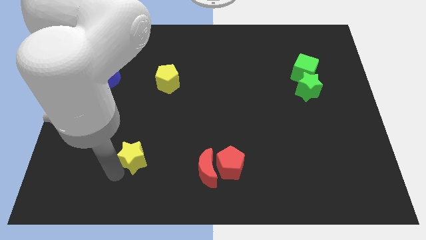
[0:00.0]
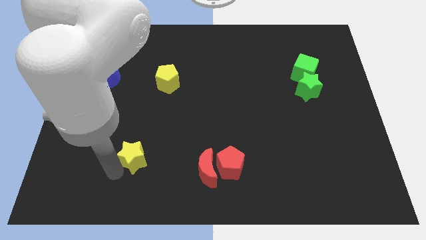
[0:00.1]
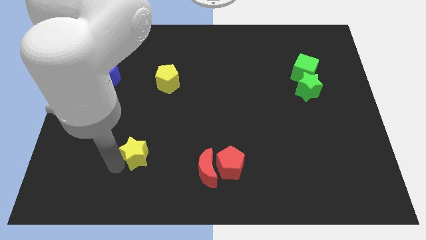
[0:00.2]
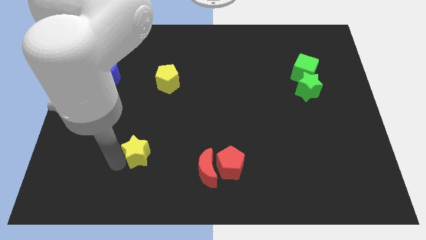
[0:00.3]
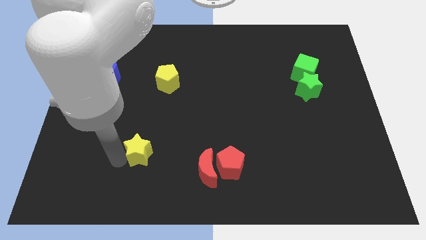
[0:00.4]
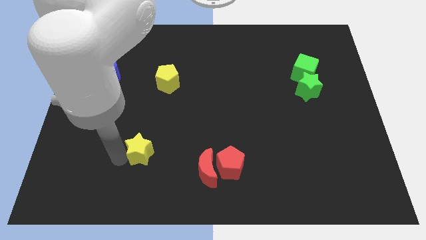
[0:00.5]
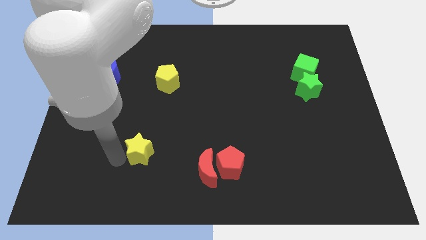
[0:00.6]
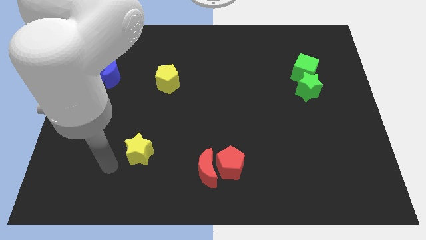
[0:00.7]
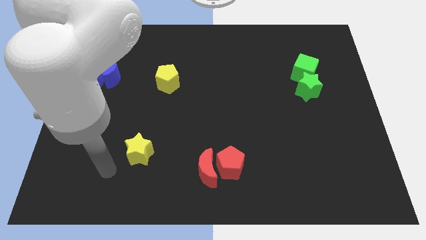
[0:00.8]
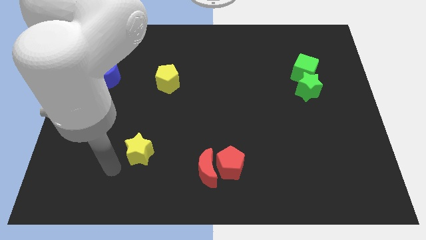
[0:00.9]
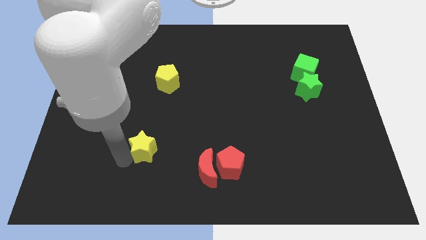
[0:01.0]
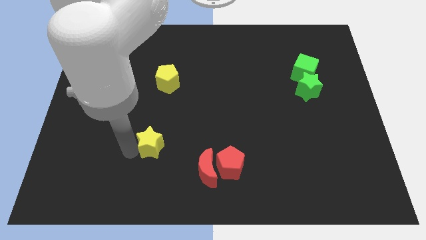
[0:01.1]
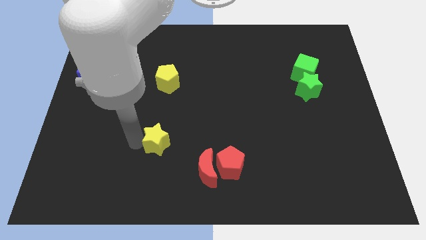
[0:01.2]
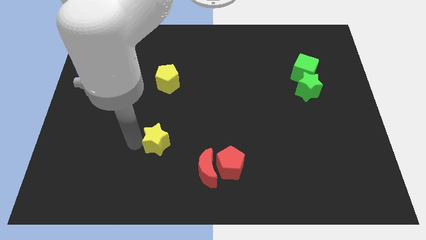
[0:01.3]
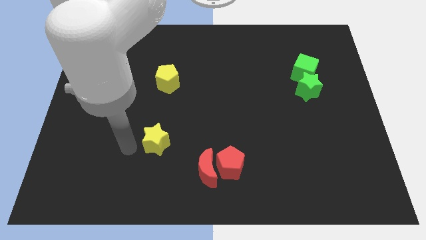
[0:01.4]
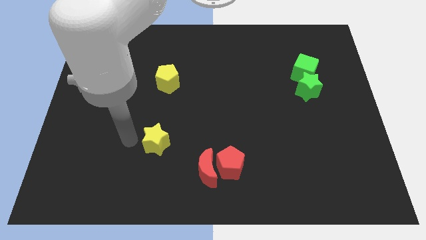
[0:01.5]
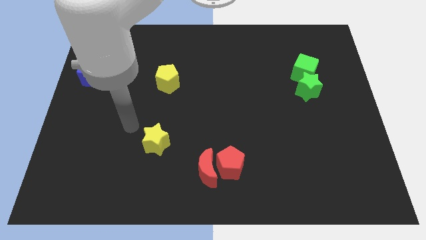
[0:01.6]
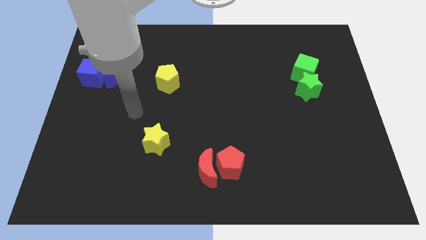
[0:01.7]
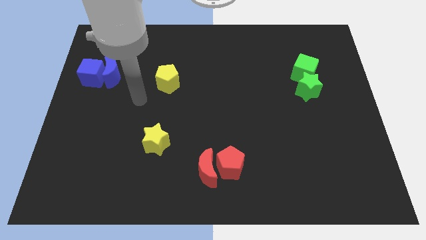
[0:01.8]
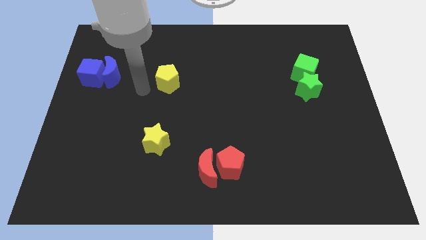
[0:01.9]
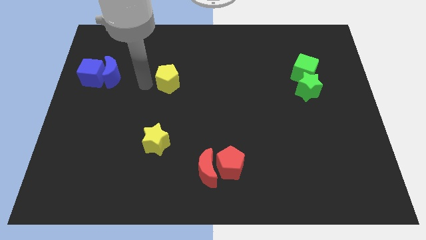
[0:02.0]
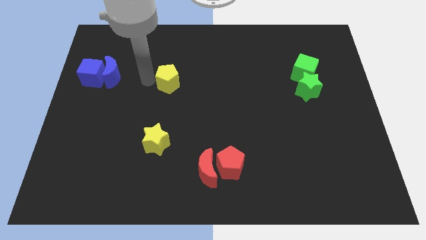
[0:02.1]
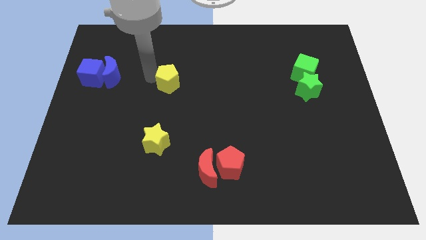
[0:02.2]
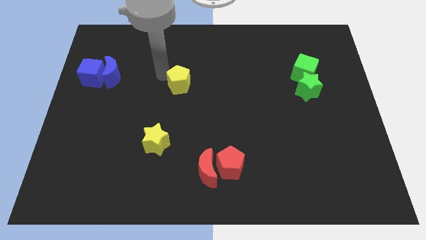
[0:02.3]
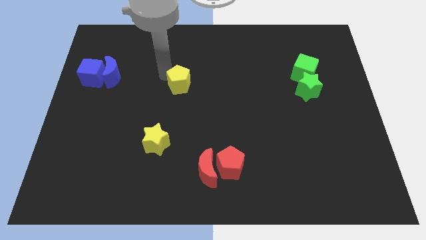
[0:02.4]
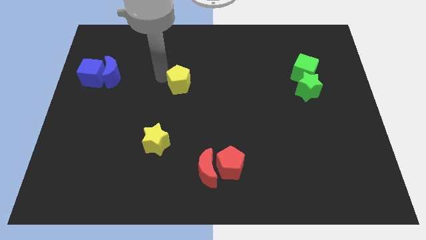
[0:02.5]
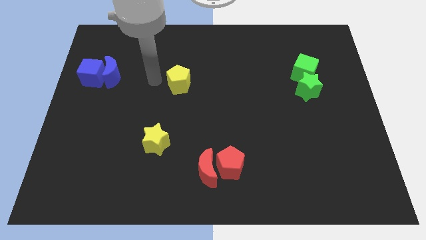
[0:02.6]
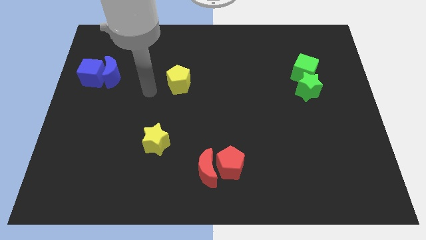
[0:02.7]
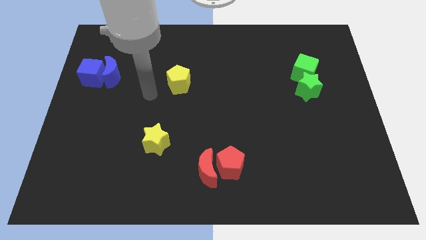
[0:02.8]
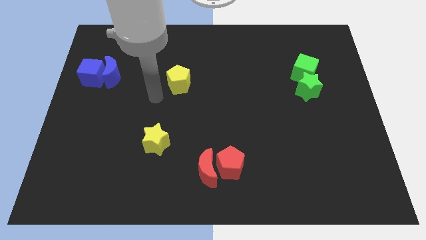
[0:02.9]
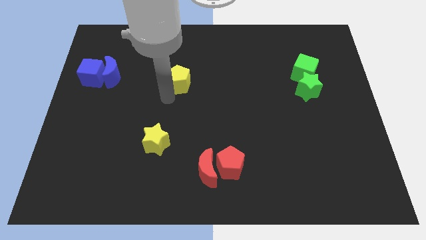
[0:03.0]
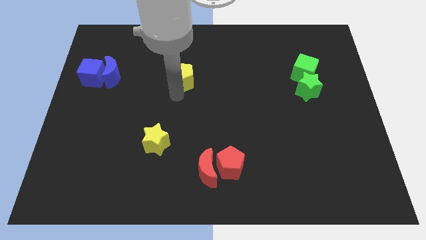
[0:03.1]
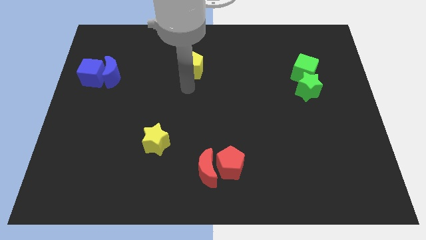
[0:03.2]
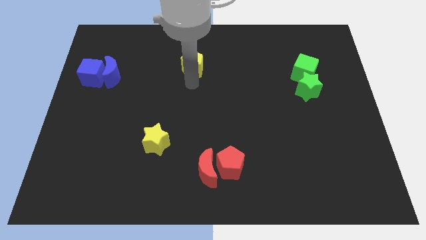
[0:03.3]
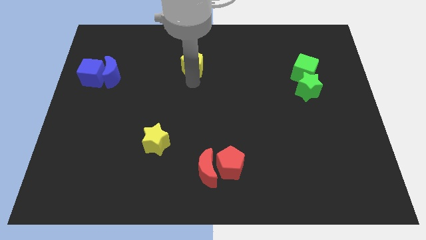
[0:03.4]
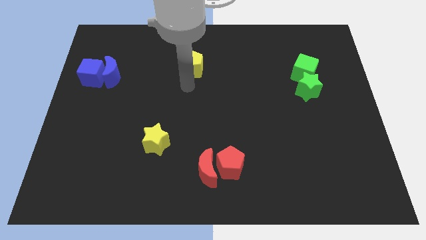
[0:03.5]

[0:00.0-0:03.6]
move the yellow pentagon slightly to the right and towards up a little

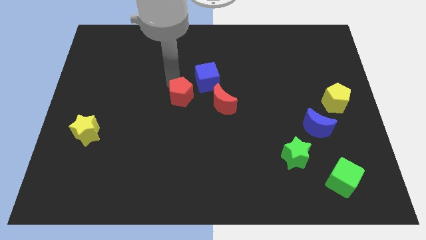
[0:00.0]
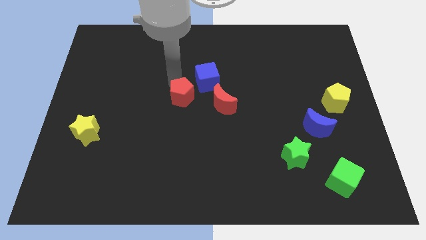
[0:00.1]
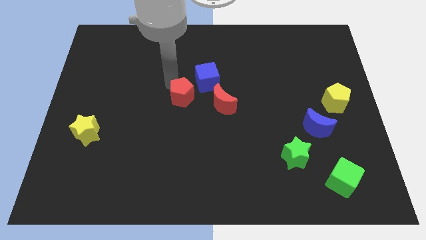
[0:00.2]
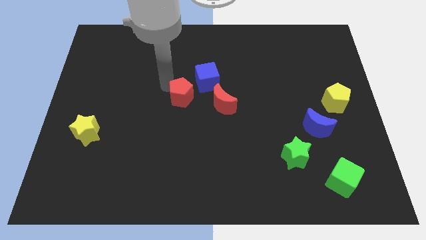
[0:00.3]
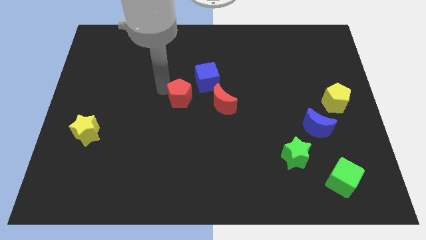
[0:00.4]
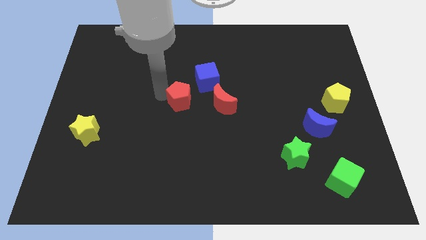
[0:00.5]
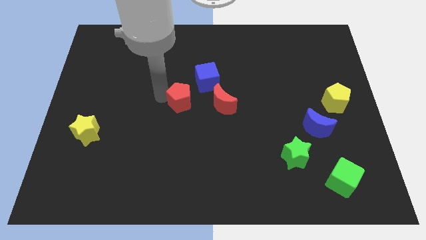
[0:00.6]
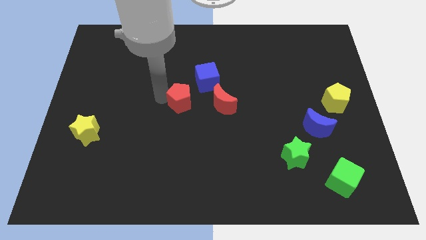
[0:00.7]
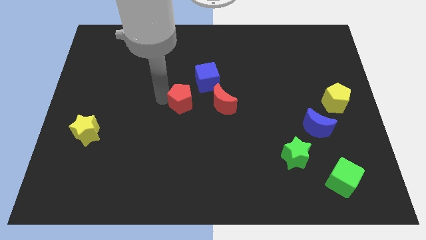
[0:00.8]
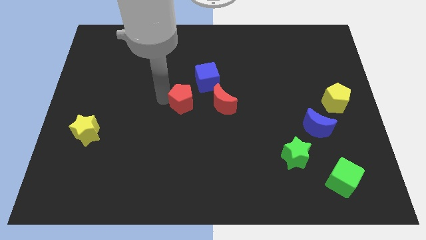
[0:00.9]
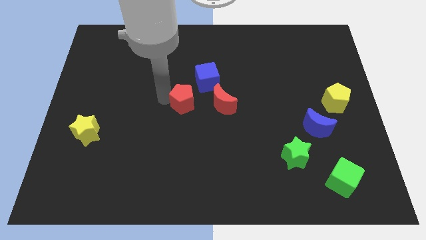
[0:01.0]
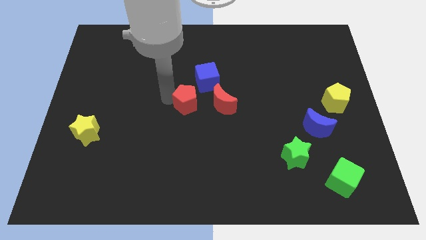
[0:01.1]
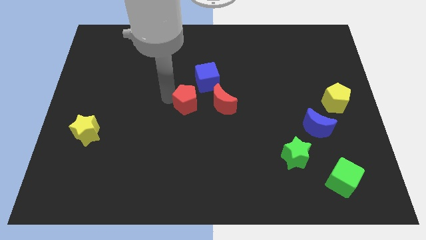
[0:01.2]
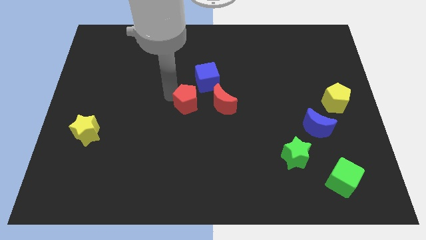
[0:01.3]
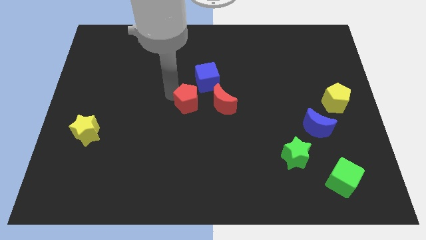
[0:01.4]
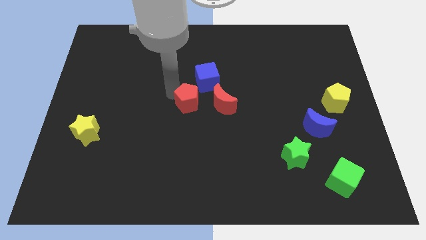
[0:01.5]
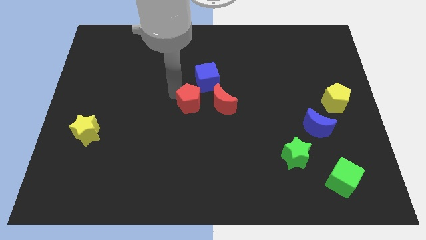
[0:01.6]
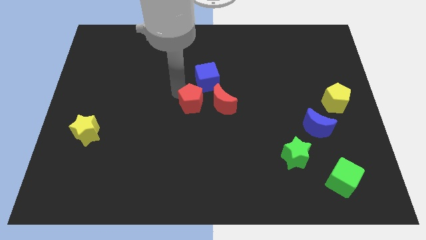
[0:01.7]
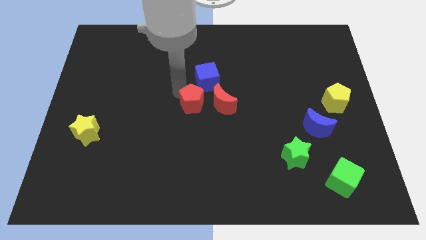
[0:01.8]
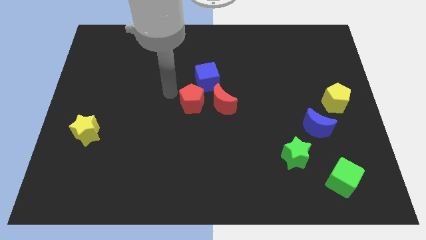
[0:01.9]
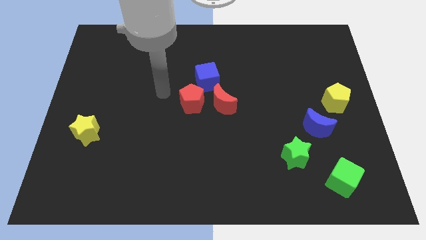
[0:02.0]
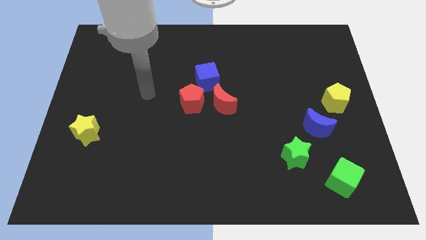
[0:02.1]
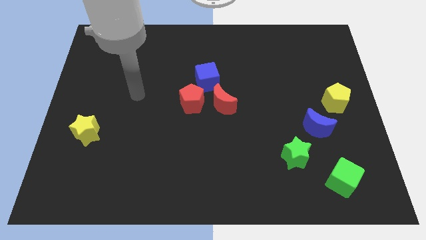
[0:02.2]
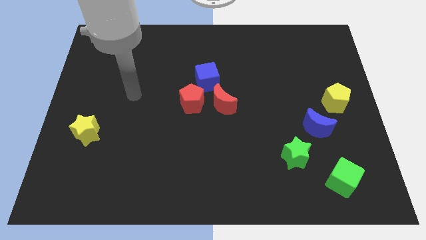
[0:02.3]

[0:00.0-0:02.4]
place the pentagon to the left side of the red crescent

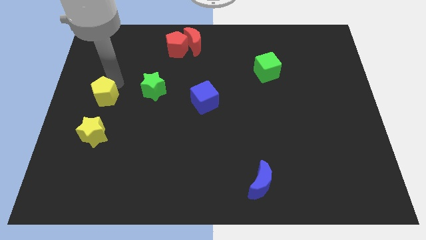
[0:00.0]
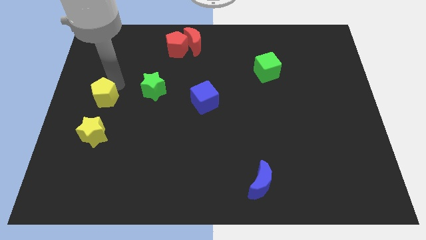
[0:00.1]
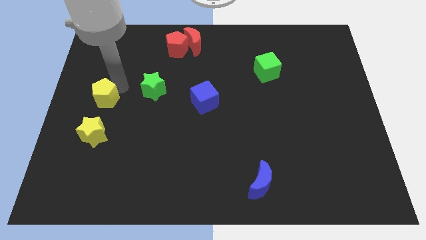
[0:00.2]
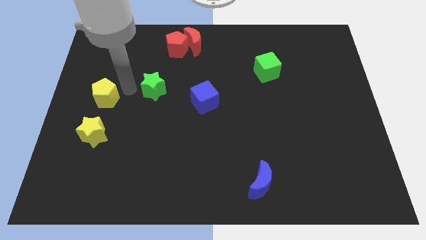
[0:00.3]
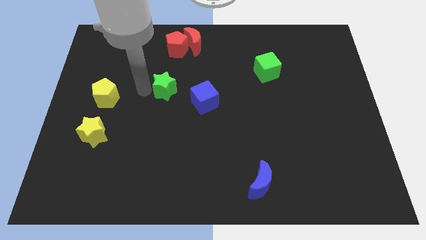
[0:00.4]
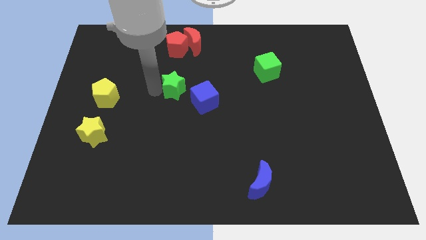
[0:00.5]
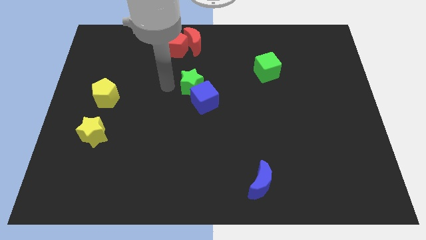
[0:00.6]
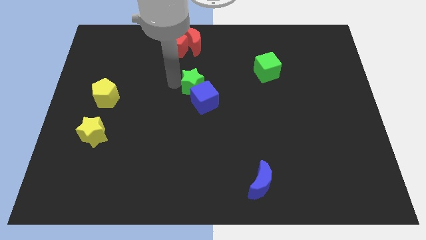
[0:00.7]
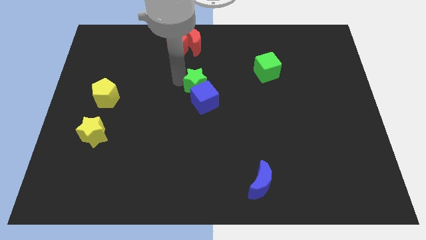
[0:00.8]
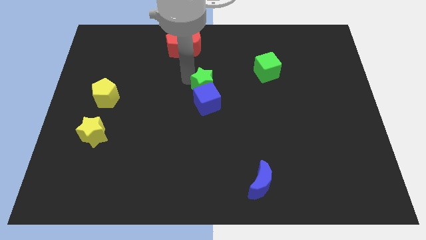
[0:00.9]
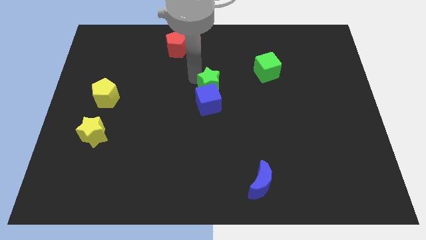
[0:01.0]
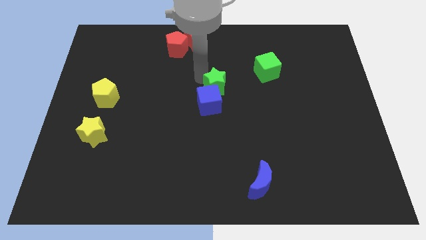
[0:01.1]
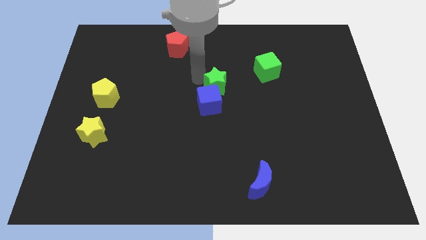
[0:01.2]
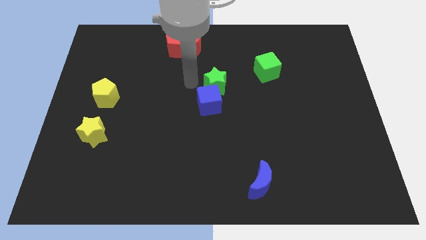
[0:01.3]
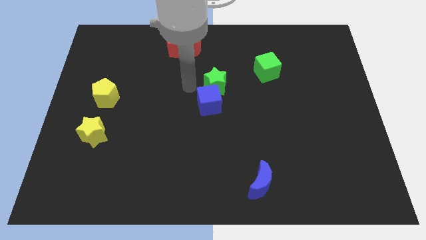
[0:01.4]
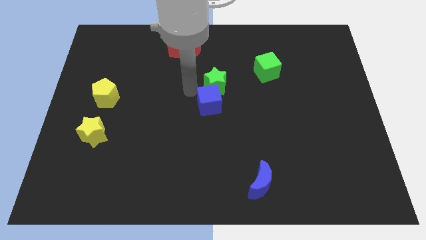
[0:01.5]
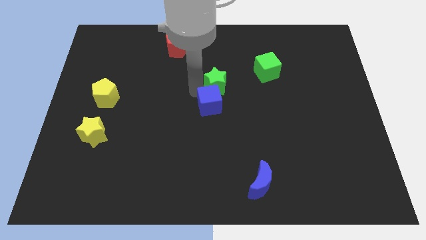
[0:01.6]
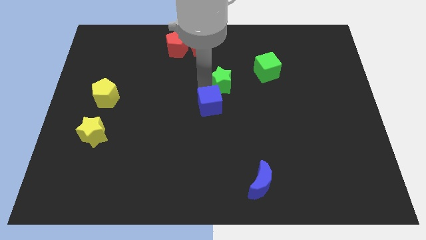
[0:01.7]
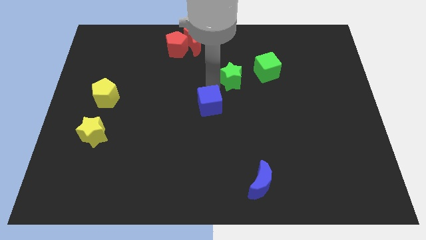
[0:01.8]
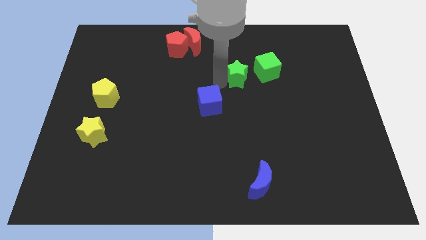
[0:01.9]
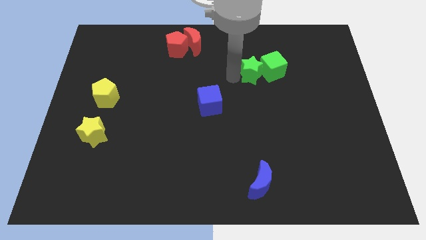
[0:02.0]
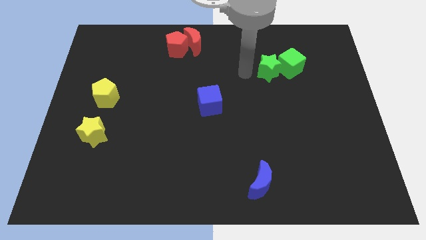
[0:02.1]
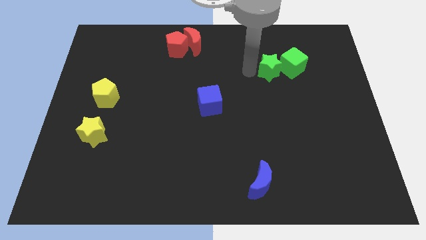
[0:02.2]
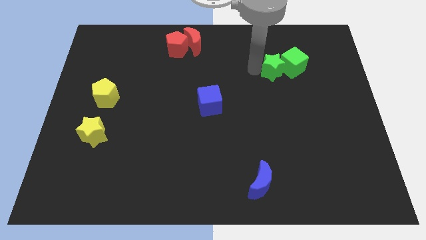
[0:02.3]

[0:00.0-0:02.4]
move the green star into the green cube to the left

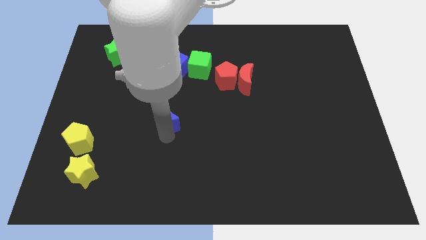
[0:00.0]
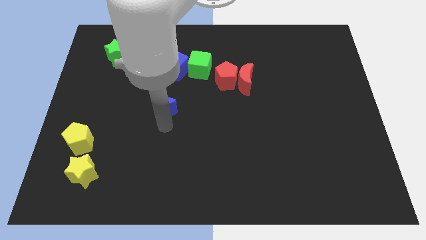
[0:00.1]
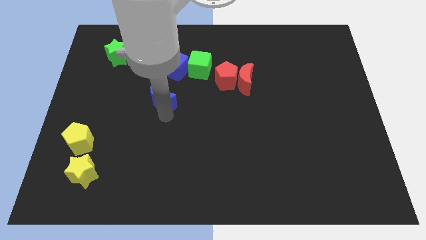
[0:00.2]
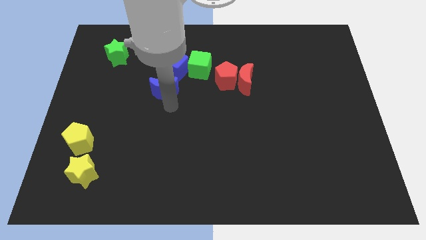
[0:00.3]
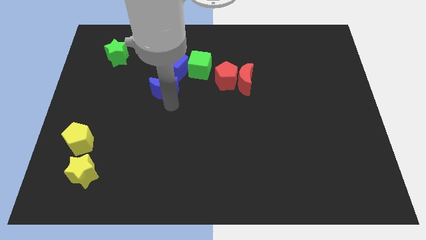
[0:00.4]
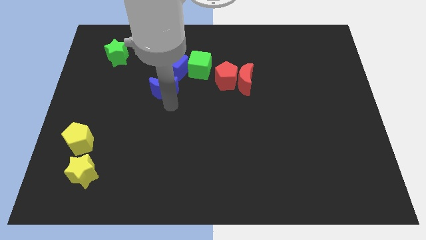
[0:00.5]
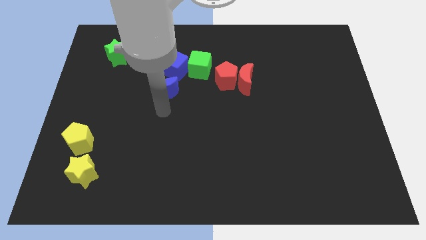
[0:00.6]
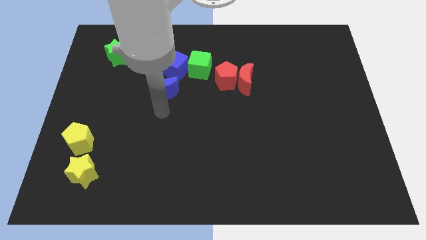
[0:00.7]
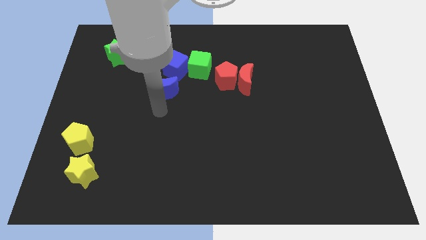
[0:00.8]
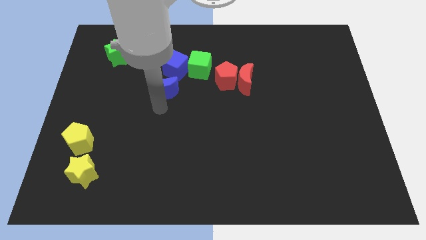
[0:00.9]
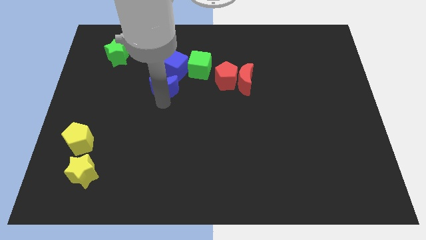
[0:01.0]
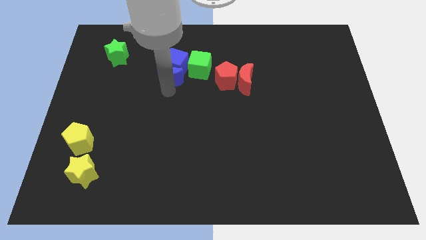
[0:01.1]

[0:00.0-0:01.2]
move the blue moon into the blue cube
